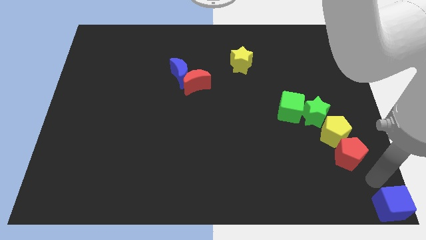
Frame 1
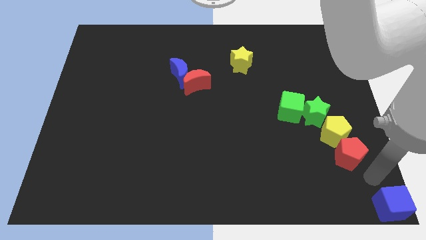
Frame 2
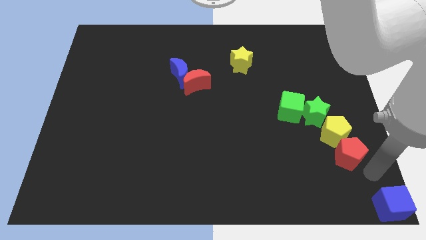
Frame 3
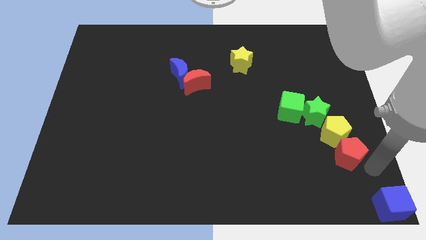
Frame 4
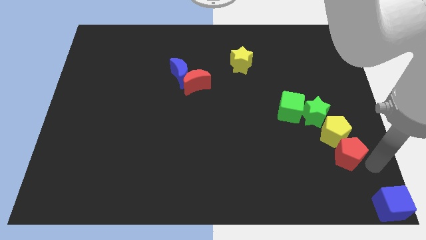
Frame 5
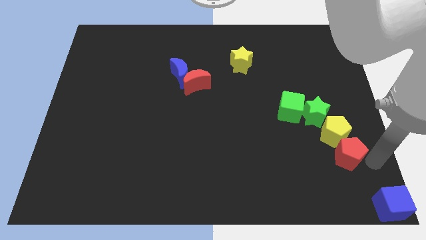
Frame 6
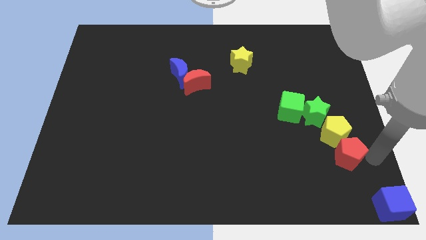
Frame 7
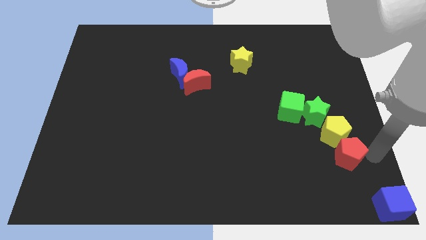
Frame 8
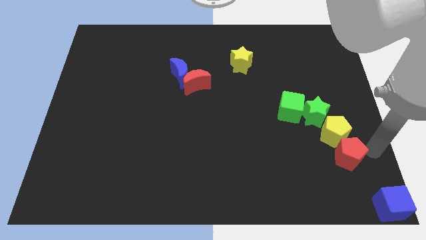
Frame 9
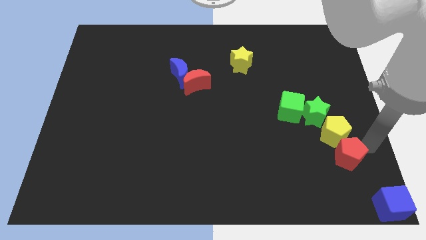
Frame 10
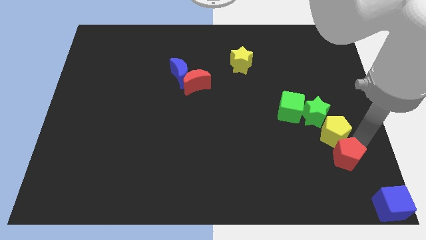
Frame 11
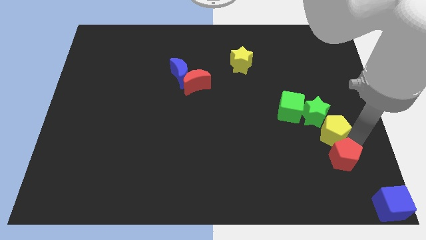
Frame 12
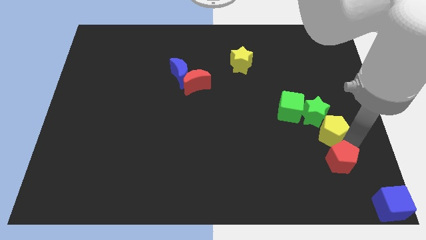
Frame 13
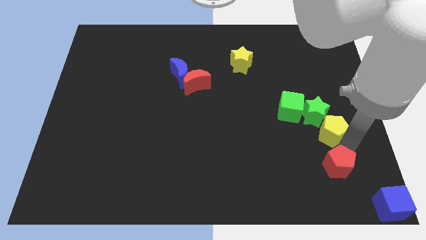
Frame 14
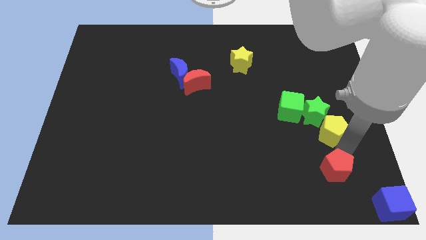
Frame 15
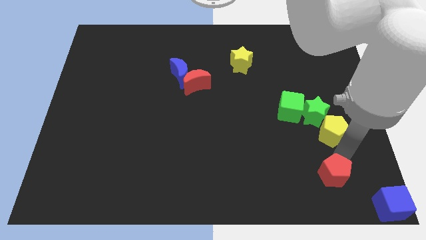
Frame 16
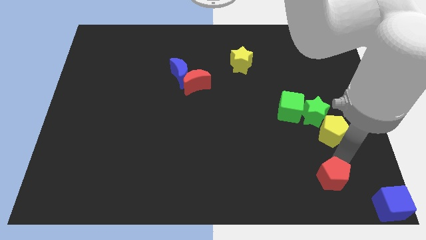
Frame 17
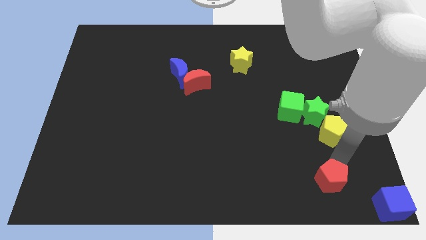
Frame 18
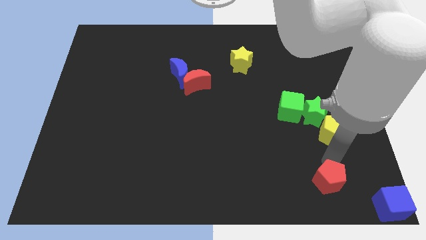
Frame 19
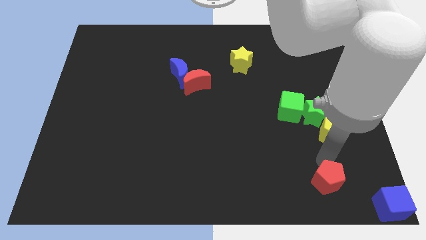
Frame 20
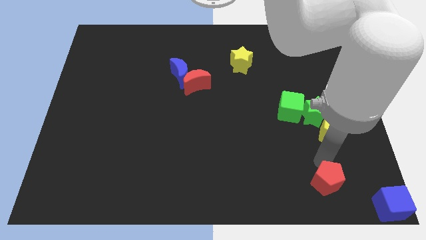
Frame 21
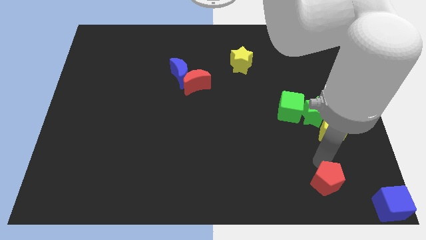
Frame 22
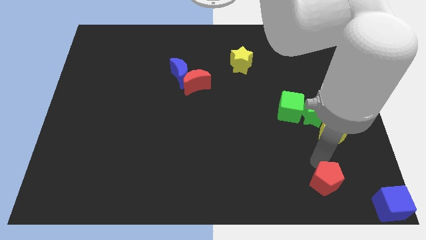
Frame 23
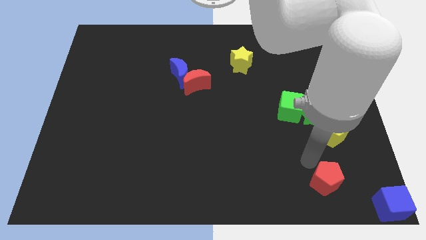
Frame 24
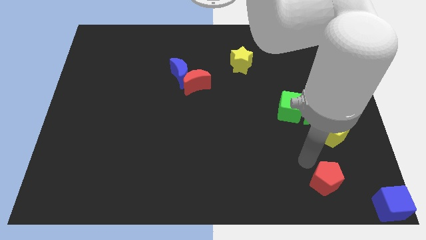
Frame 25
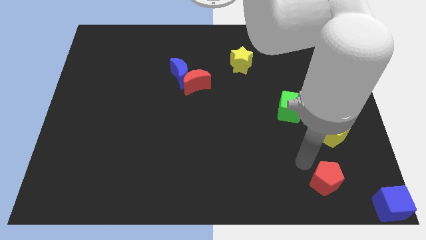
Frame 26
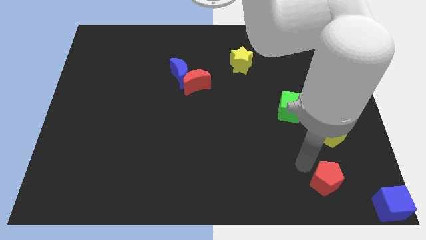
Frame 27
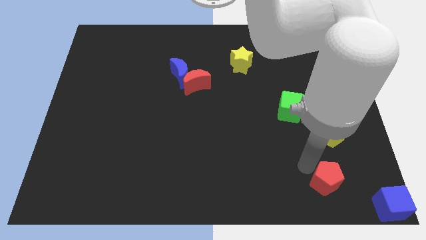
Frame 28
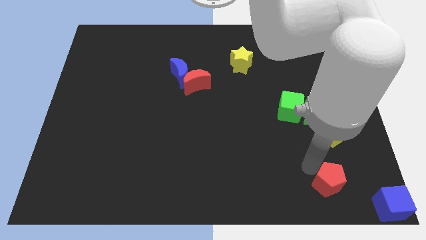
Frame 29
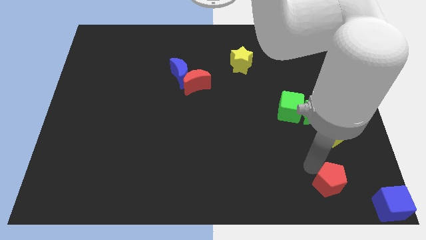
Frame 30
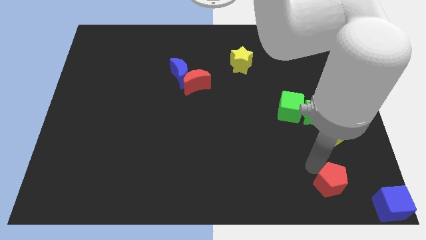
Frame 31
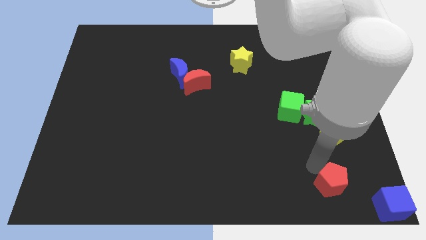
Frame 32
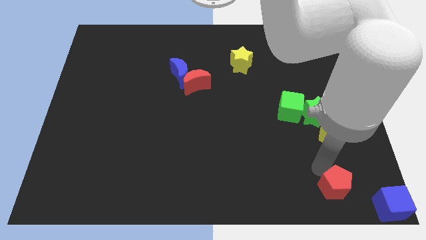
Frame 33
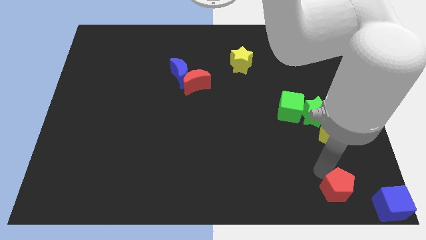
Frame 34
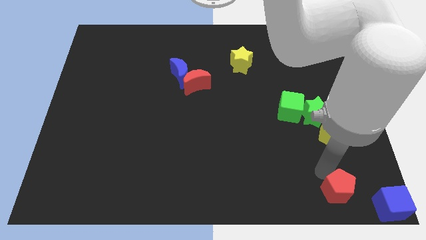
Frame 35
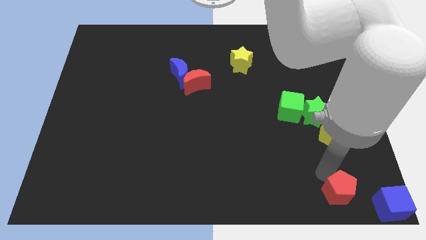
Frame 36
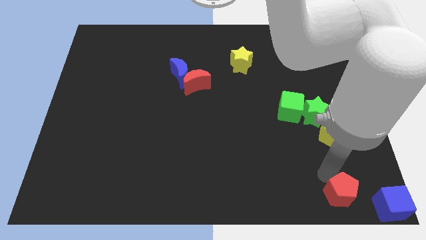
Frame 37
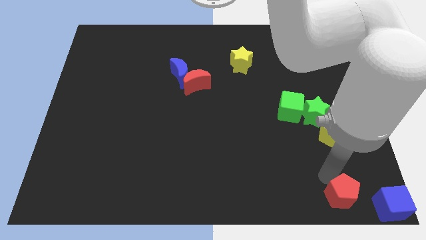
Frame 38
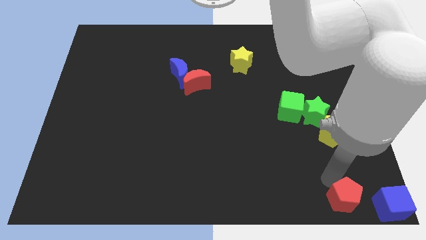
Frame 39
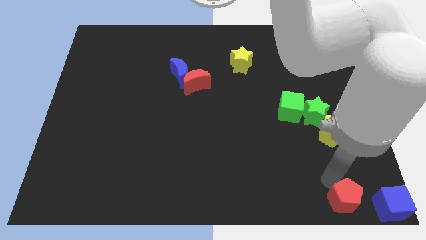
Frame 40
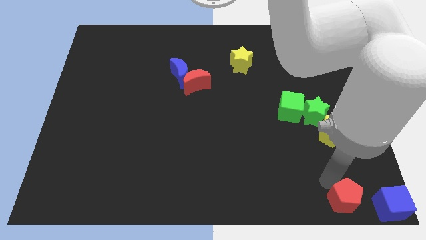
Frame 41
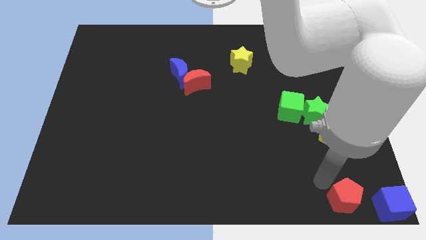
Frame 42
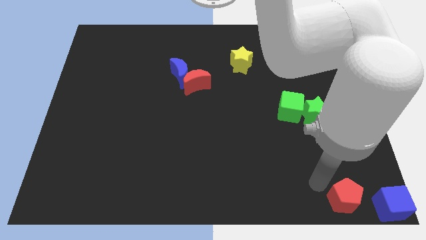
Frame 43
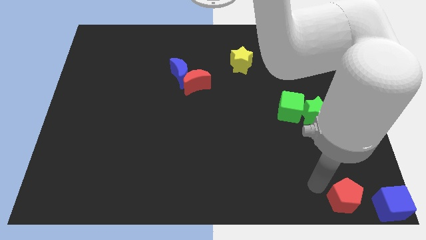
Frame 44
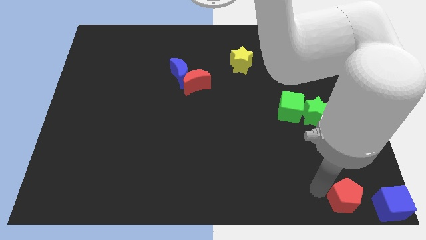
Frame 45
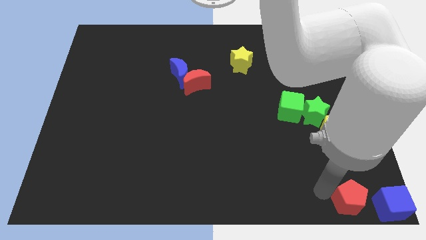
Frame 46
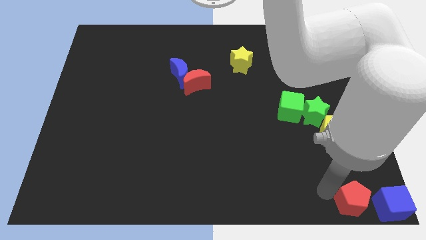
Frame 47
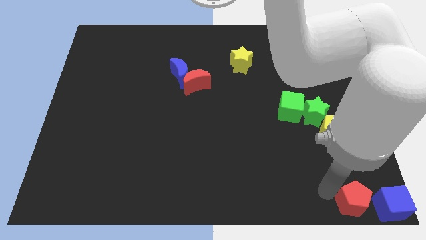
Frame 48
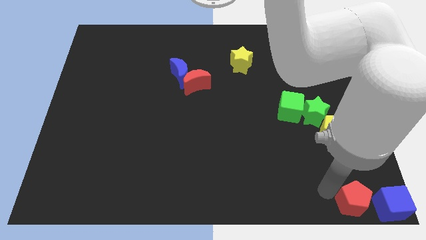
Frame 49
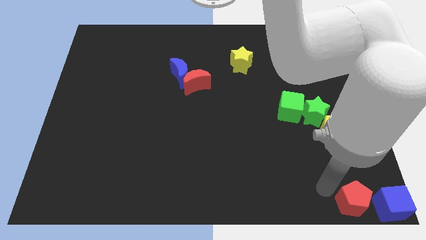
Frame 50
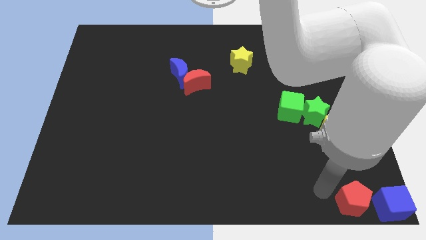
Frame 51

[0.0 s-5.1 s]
place the red pentagon left to the blue cube

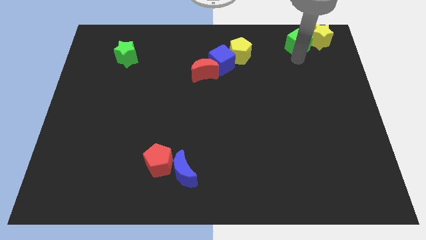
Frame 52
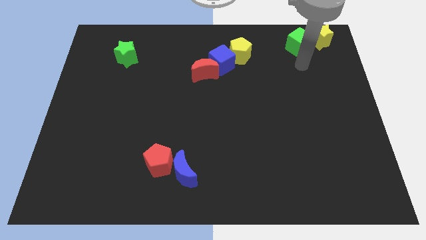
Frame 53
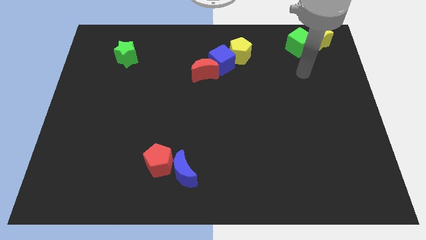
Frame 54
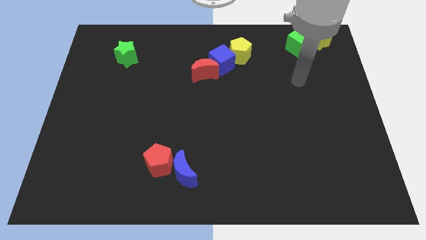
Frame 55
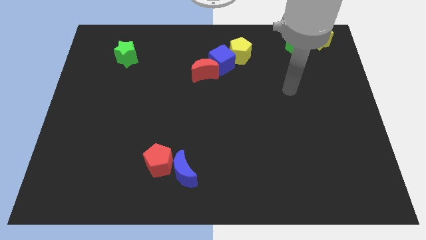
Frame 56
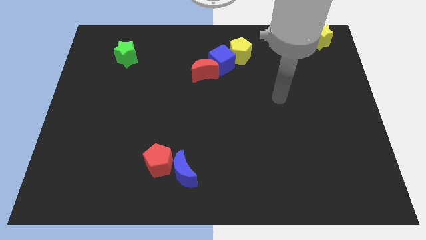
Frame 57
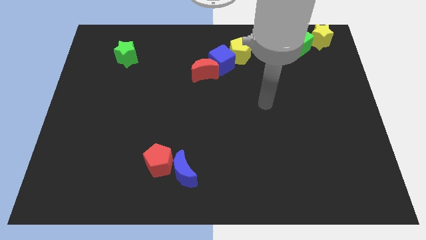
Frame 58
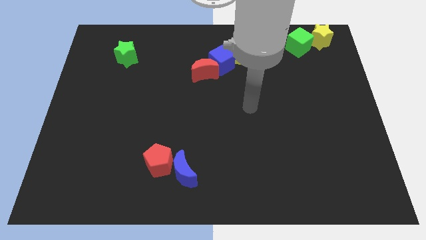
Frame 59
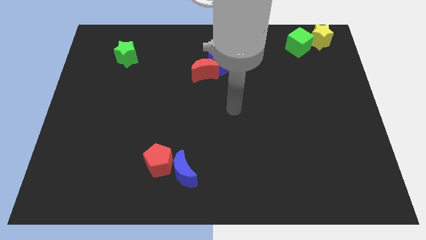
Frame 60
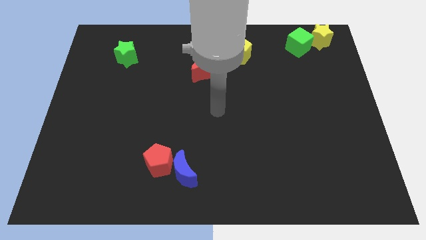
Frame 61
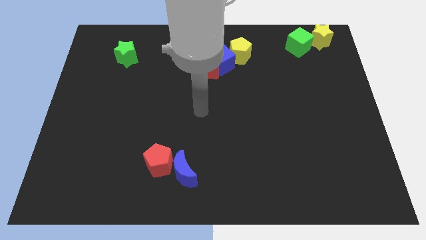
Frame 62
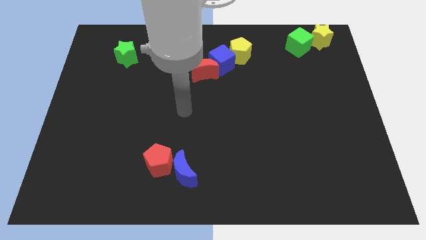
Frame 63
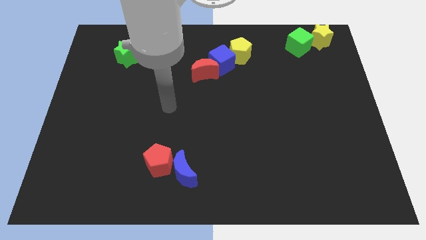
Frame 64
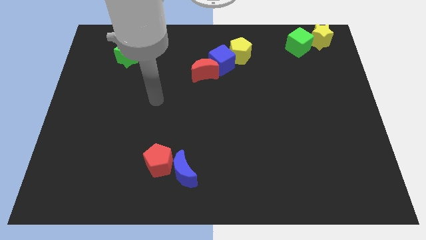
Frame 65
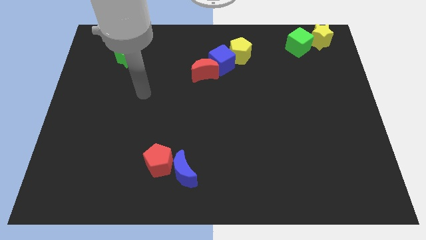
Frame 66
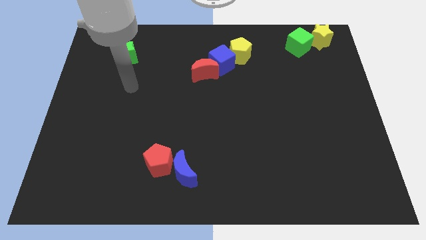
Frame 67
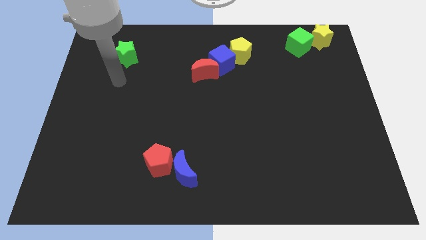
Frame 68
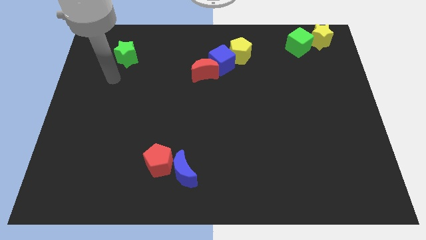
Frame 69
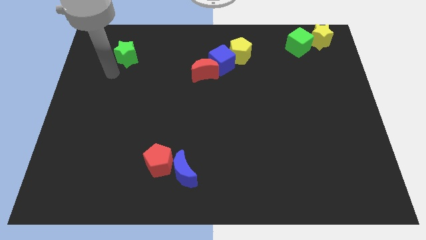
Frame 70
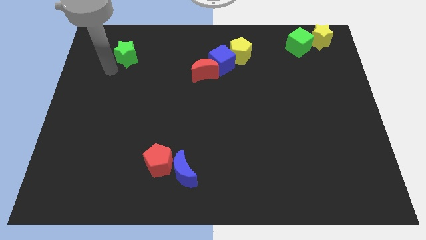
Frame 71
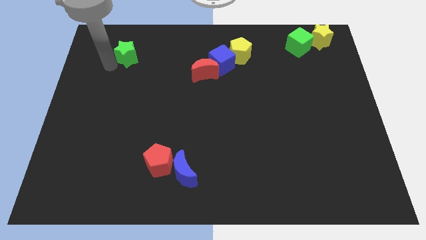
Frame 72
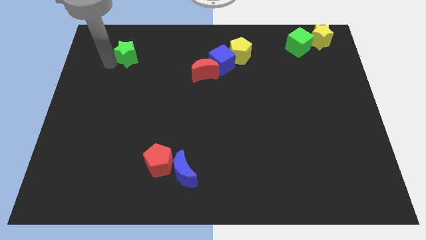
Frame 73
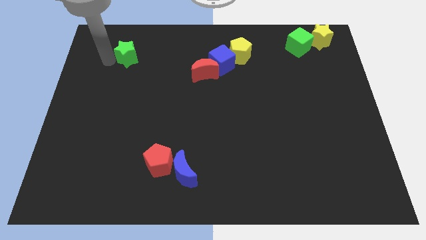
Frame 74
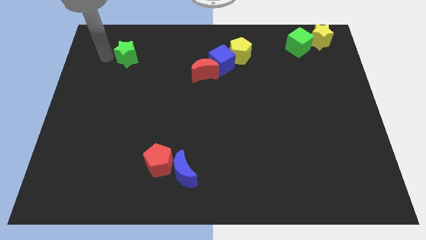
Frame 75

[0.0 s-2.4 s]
point your arm at the left of the green star

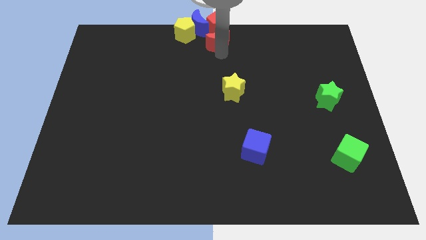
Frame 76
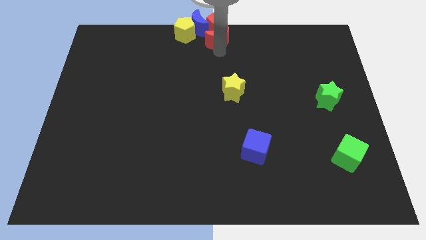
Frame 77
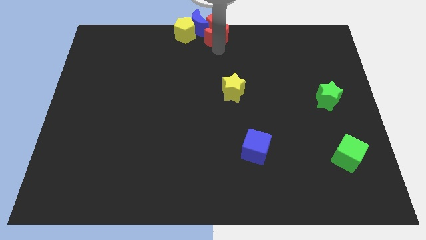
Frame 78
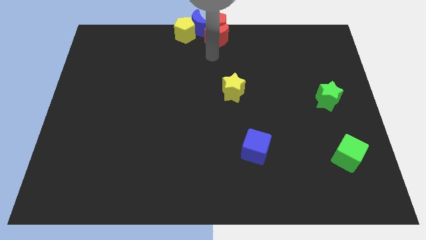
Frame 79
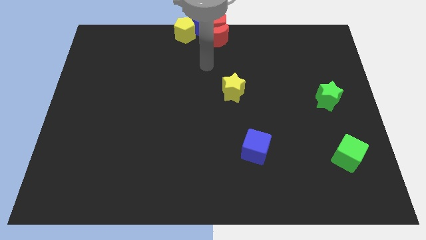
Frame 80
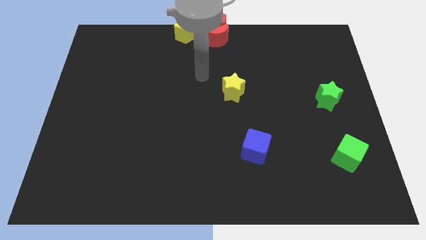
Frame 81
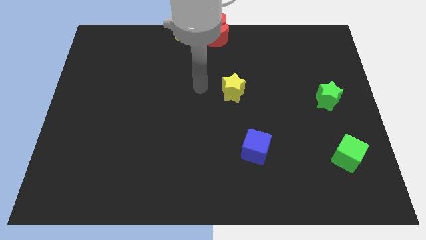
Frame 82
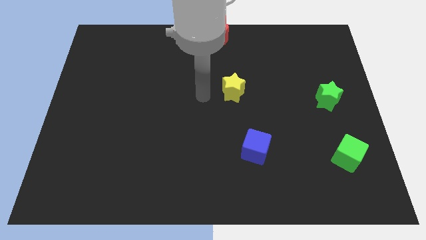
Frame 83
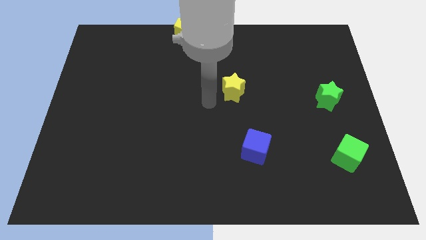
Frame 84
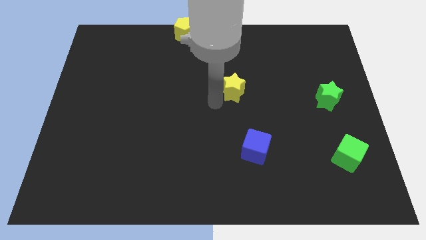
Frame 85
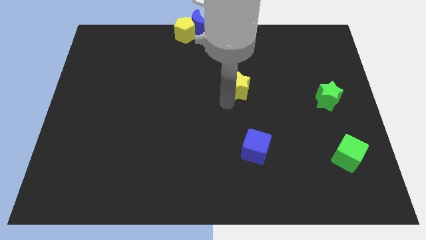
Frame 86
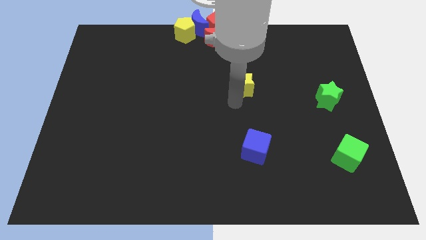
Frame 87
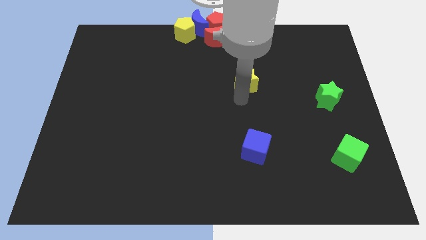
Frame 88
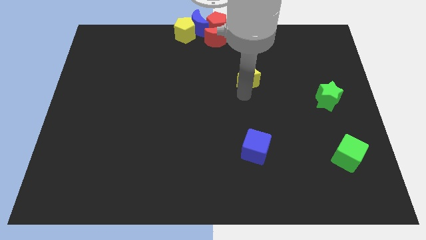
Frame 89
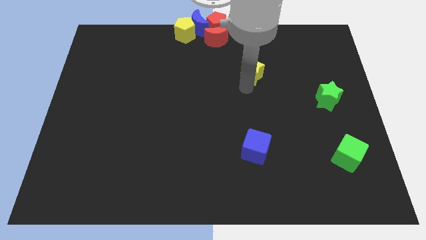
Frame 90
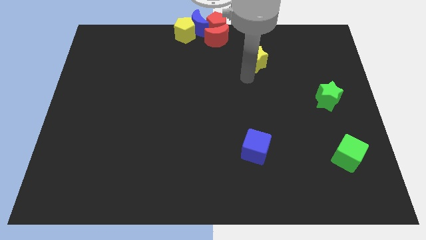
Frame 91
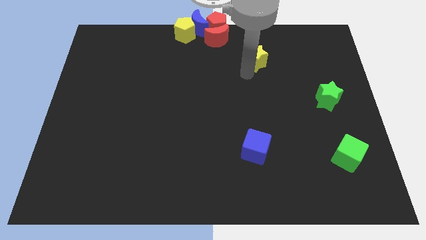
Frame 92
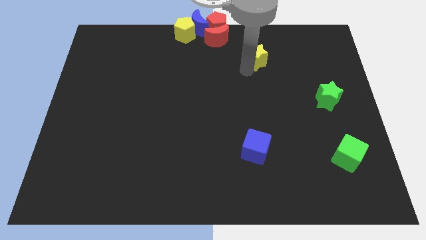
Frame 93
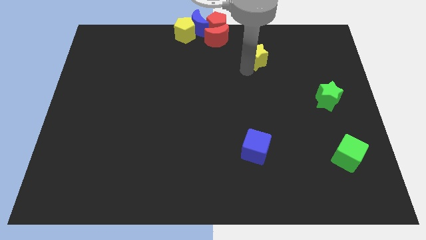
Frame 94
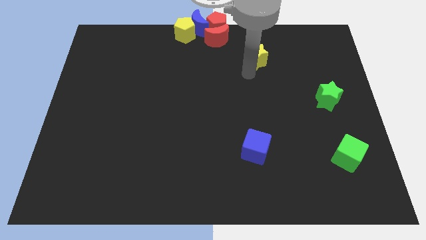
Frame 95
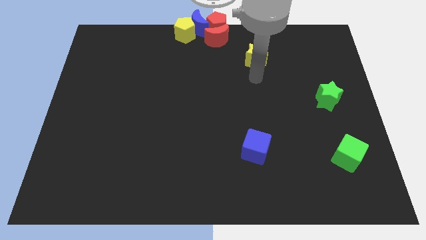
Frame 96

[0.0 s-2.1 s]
push the yellow star diagonal to the green star
